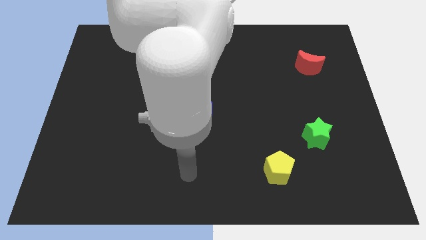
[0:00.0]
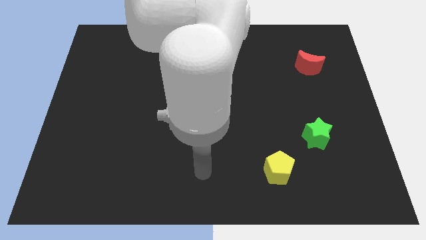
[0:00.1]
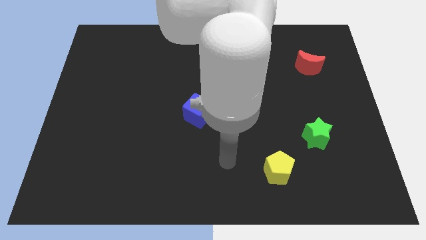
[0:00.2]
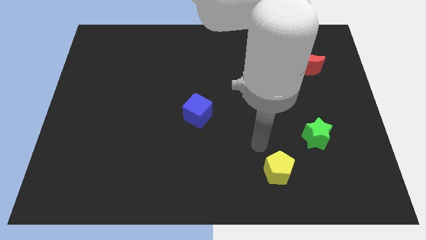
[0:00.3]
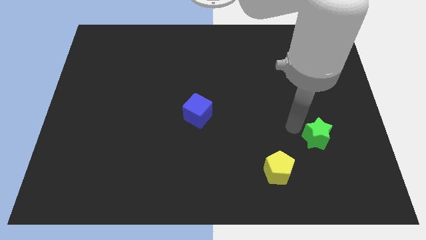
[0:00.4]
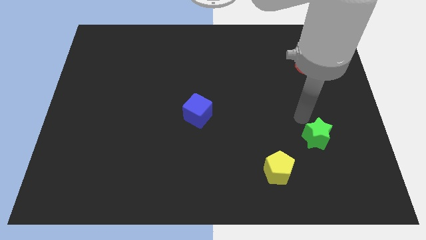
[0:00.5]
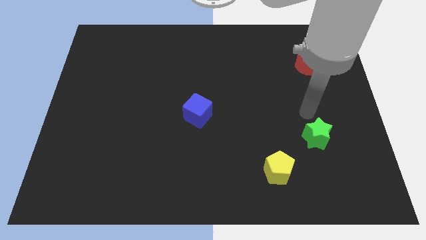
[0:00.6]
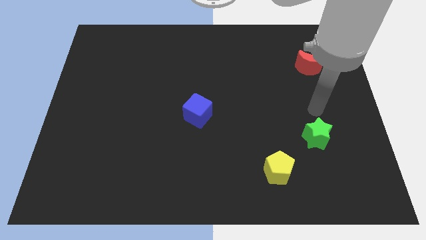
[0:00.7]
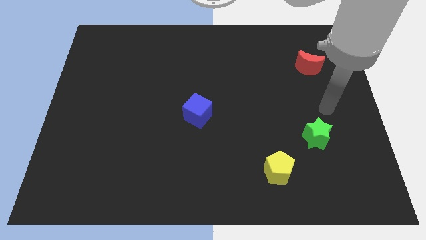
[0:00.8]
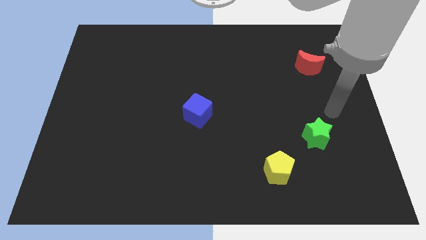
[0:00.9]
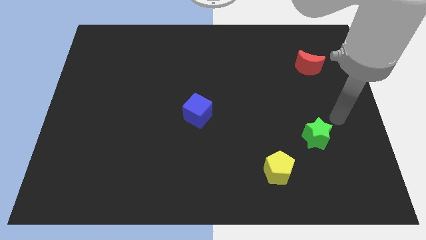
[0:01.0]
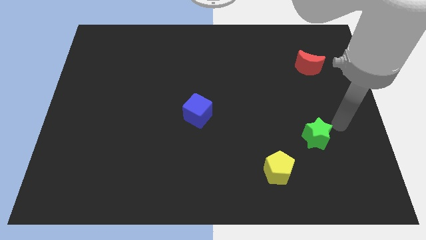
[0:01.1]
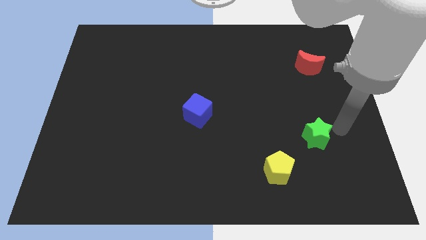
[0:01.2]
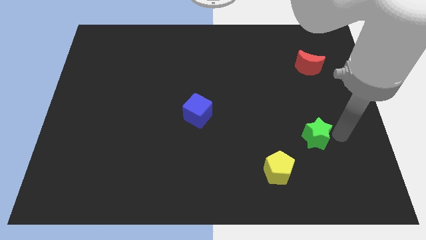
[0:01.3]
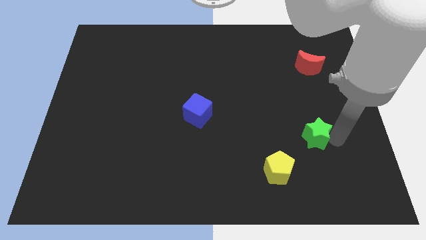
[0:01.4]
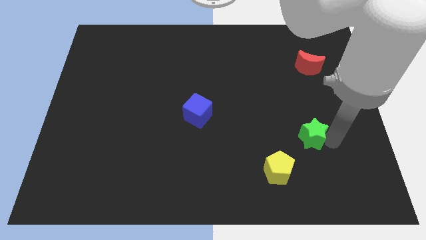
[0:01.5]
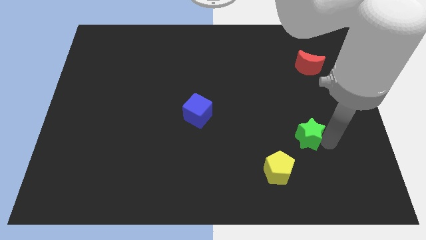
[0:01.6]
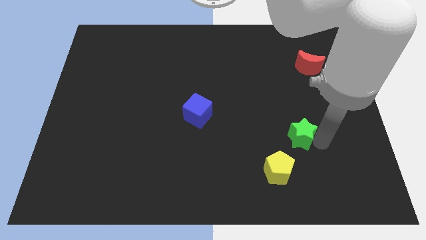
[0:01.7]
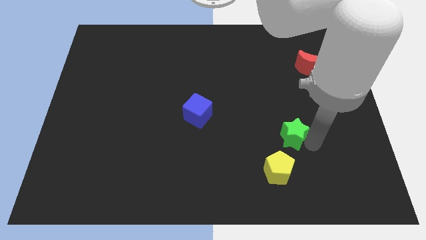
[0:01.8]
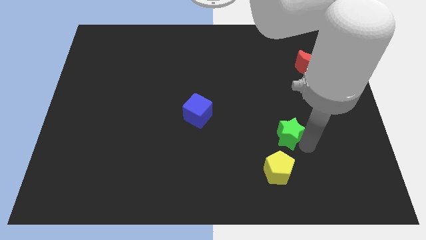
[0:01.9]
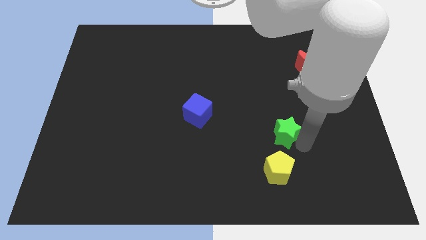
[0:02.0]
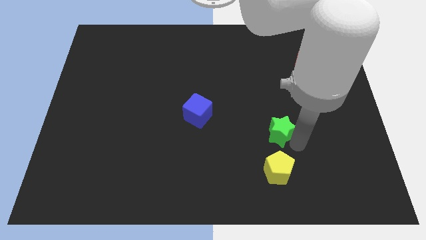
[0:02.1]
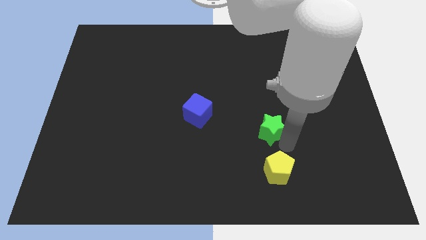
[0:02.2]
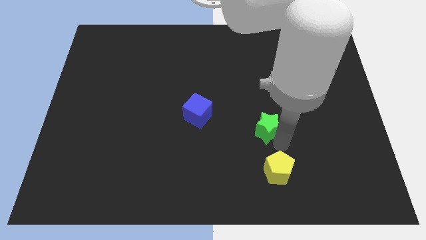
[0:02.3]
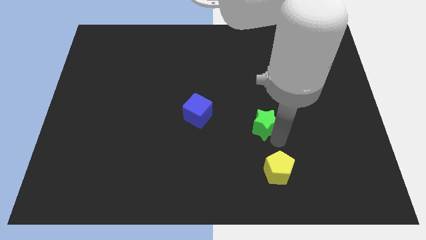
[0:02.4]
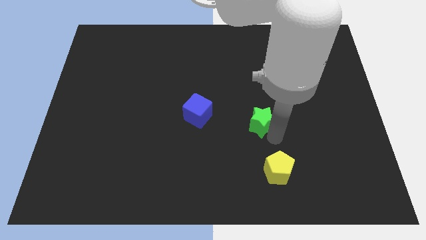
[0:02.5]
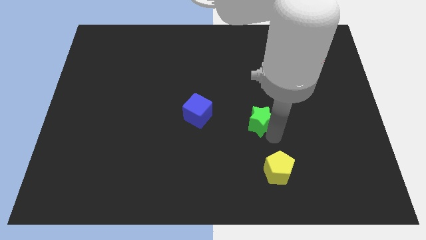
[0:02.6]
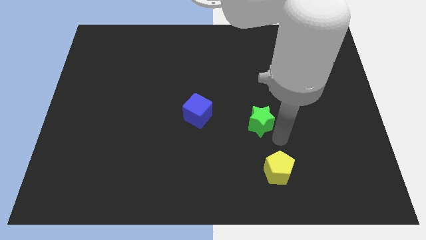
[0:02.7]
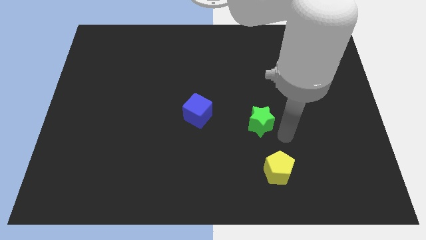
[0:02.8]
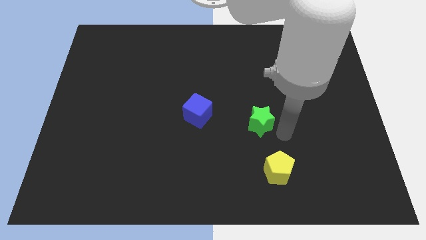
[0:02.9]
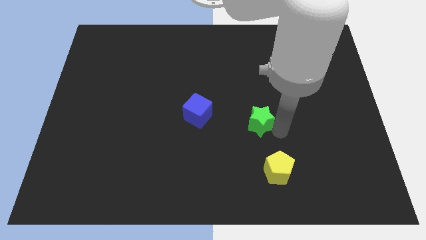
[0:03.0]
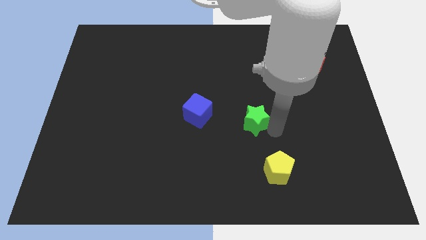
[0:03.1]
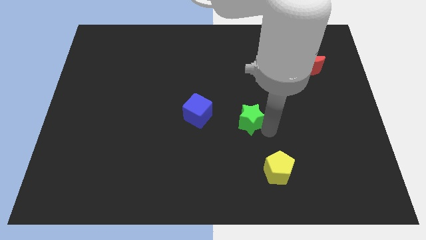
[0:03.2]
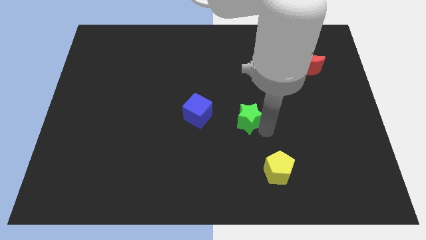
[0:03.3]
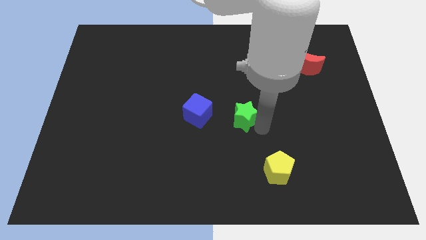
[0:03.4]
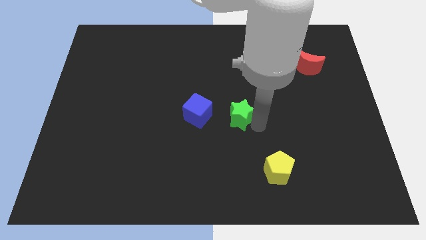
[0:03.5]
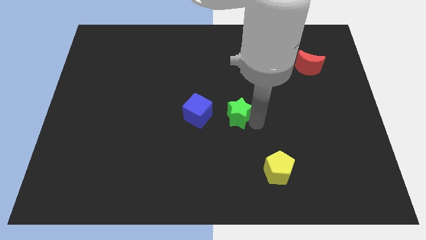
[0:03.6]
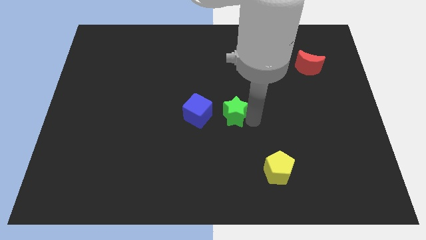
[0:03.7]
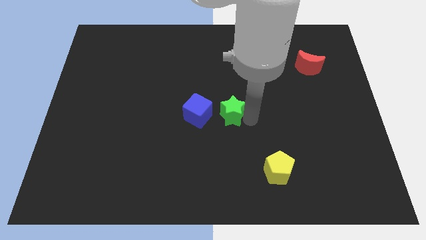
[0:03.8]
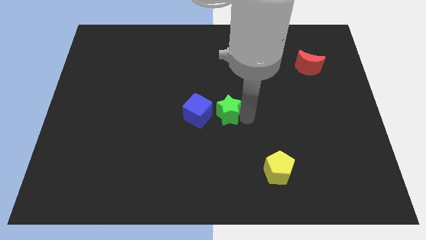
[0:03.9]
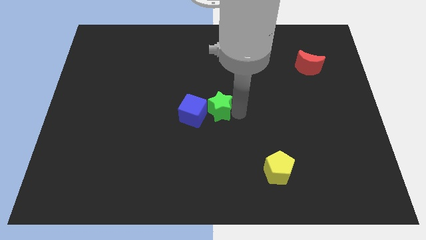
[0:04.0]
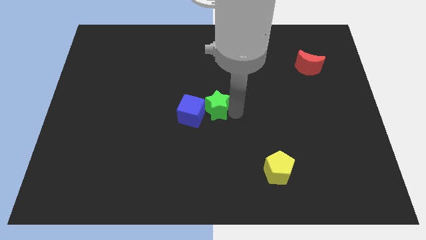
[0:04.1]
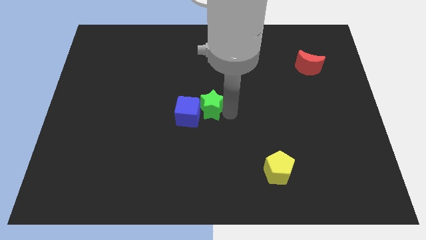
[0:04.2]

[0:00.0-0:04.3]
move the green block next to the blue cube

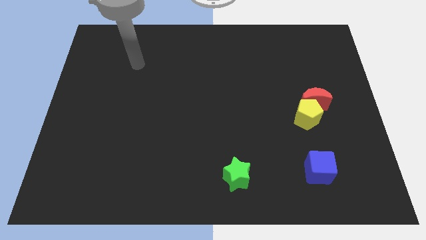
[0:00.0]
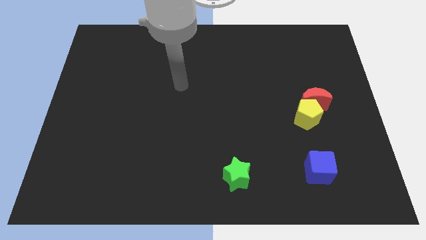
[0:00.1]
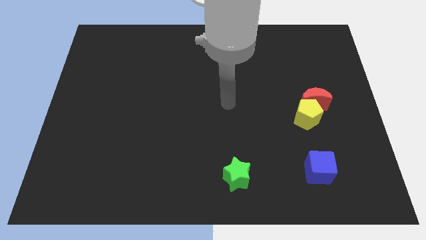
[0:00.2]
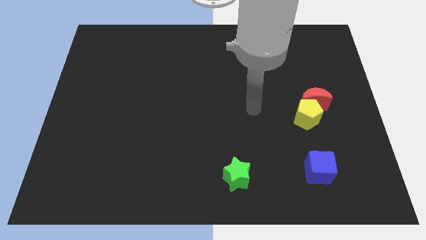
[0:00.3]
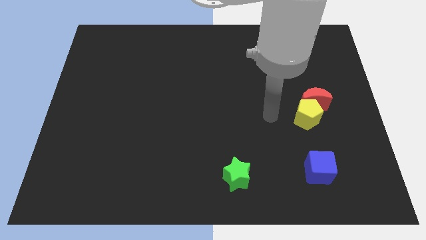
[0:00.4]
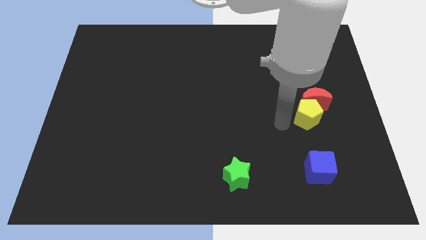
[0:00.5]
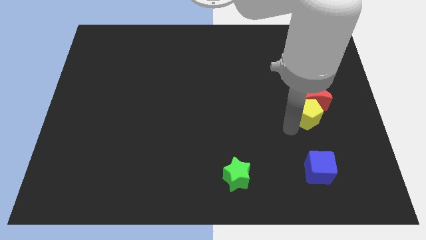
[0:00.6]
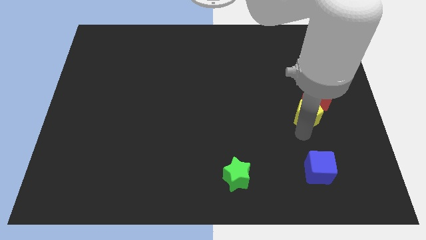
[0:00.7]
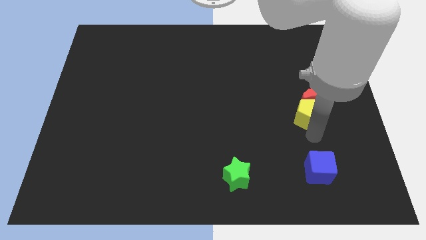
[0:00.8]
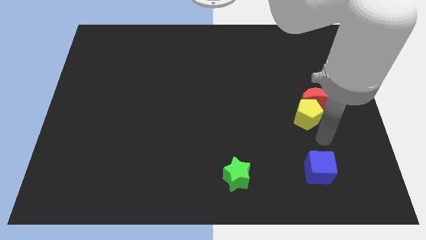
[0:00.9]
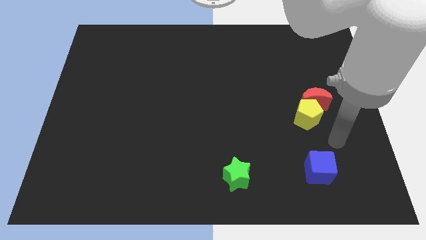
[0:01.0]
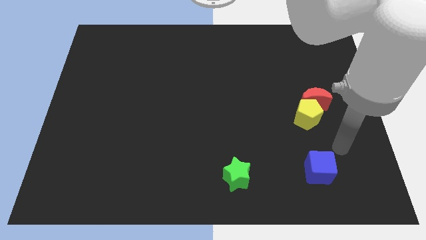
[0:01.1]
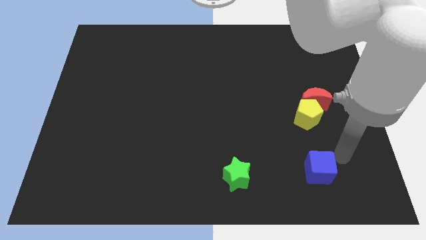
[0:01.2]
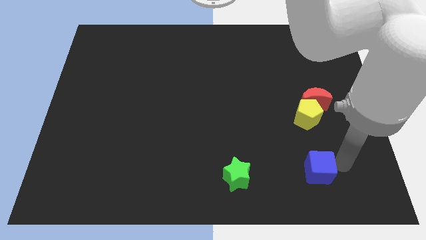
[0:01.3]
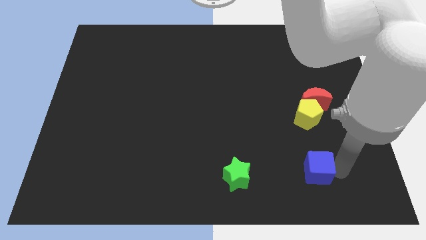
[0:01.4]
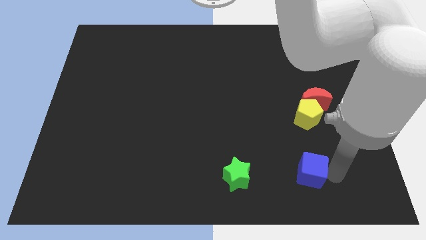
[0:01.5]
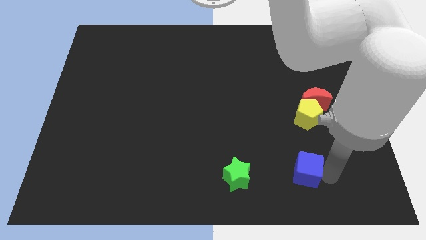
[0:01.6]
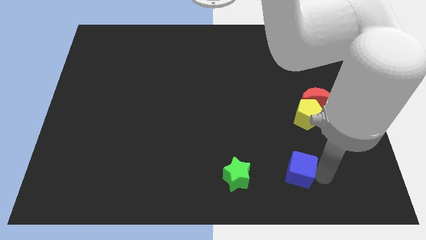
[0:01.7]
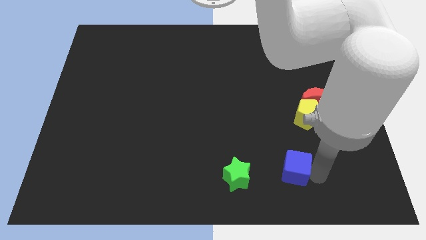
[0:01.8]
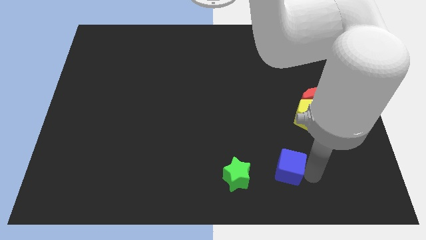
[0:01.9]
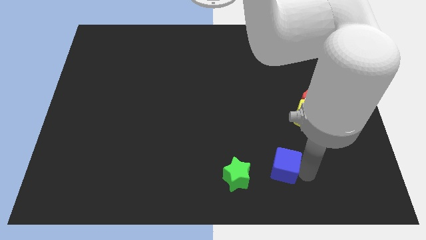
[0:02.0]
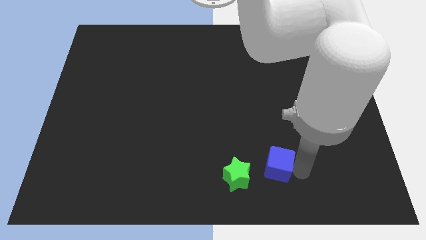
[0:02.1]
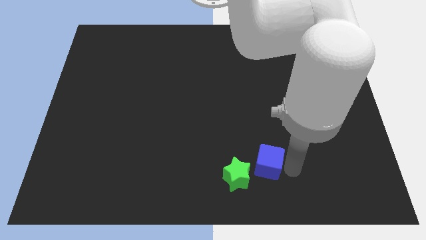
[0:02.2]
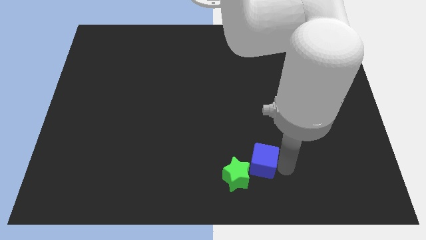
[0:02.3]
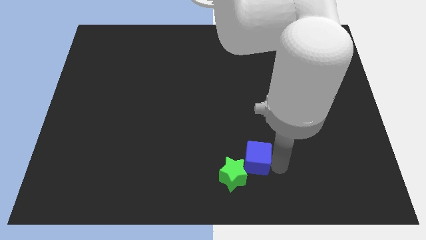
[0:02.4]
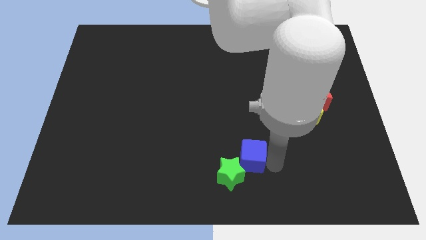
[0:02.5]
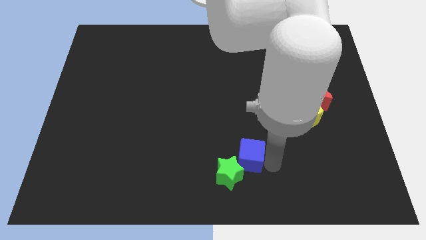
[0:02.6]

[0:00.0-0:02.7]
push the blue cube towards the green block

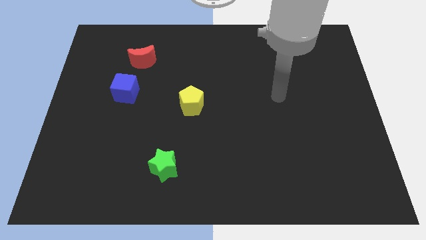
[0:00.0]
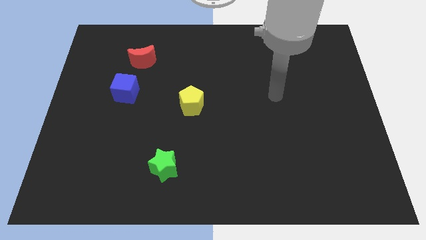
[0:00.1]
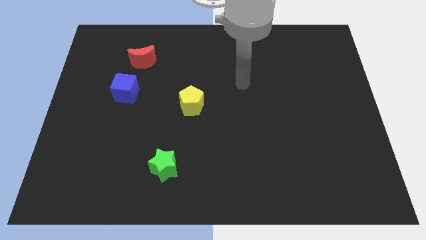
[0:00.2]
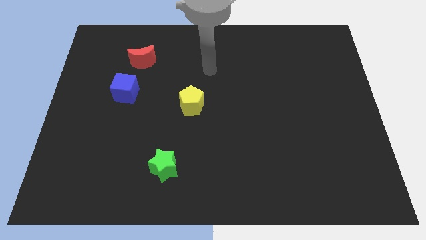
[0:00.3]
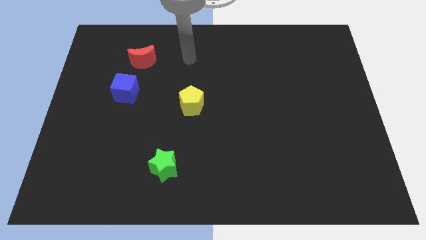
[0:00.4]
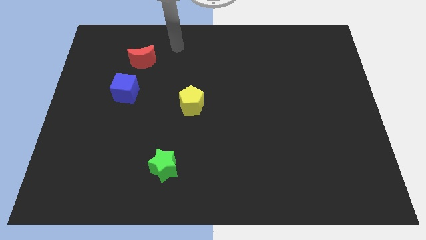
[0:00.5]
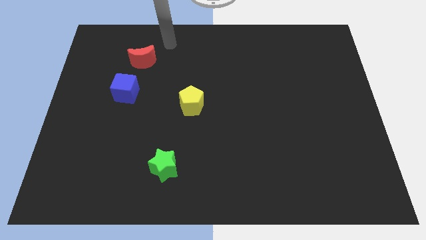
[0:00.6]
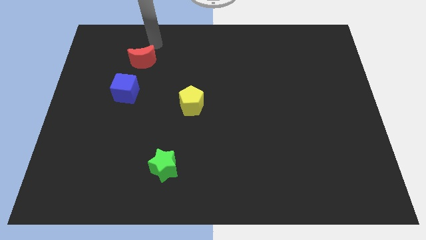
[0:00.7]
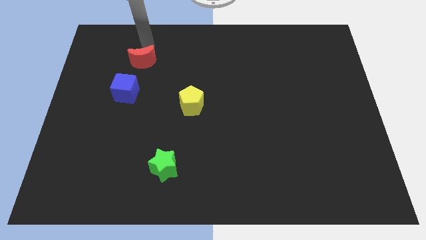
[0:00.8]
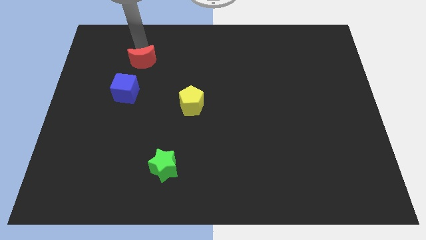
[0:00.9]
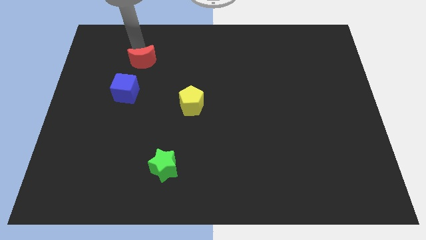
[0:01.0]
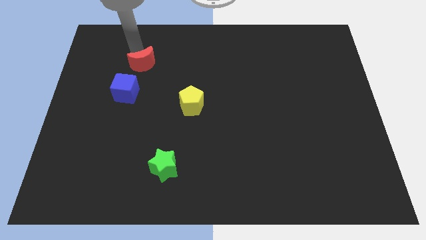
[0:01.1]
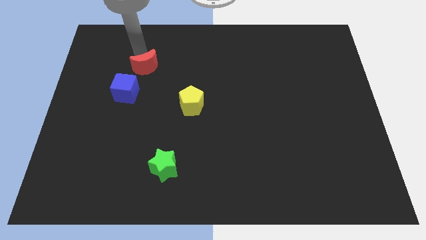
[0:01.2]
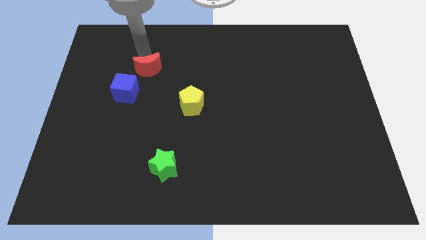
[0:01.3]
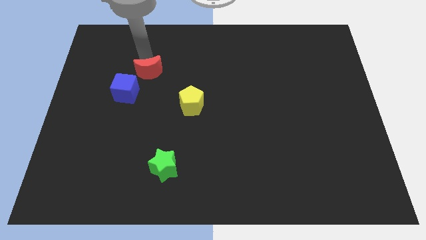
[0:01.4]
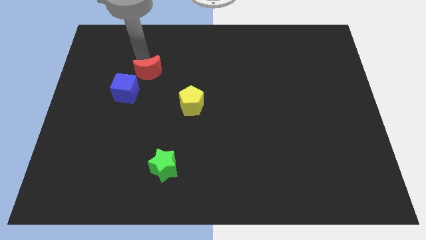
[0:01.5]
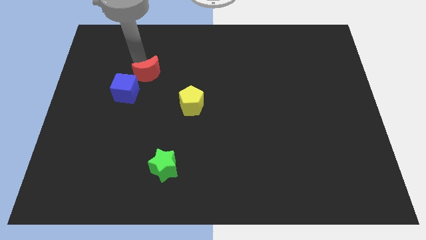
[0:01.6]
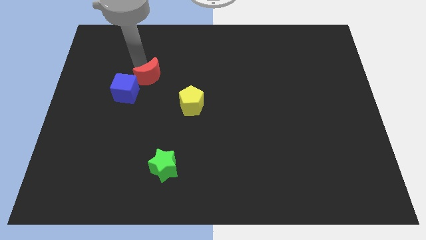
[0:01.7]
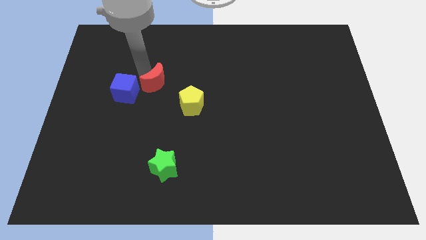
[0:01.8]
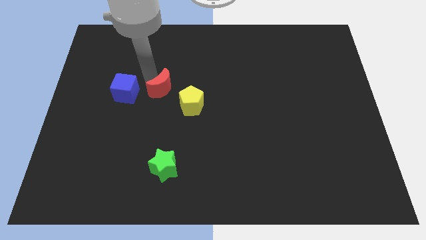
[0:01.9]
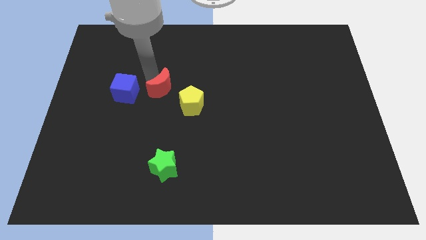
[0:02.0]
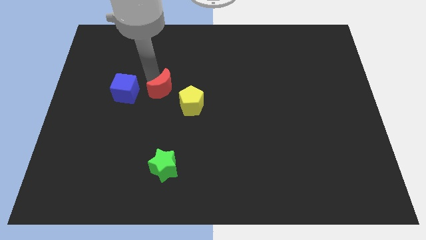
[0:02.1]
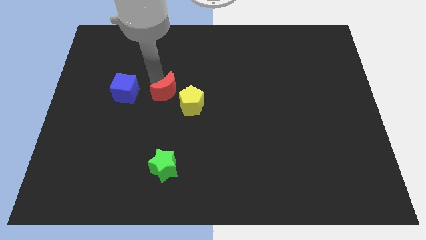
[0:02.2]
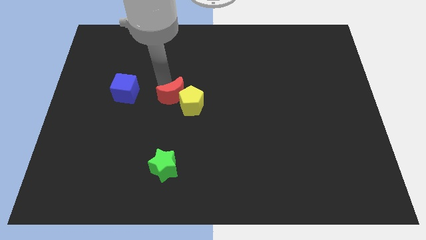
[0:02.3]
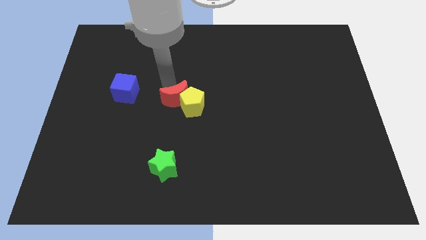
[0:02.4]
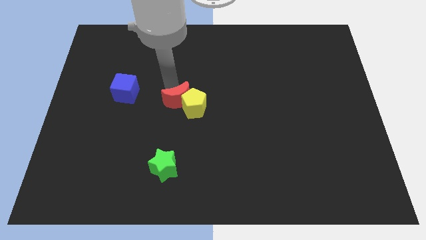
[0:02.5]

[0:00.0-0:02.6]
push the red moon next to the pentagon
